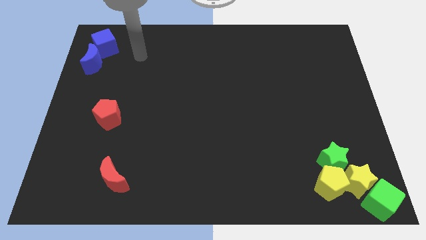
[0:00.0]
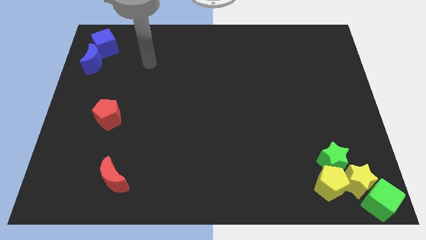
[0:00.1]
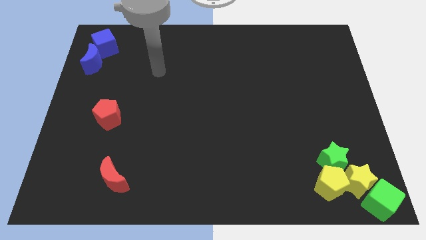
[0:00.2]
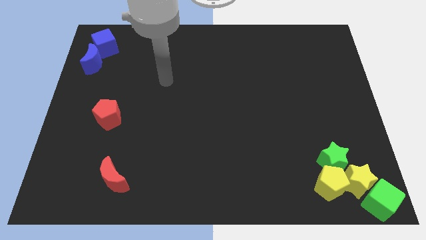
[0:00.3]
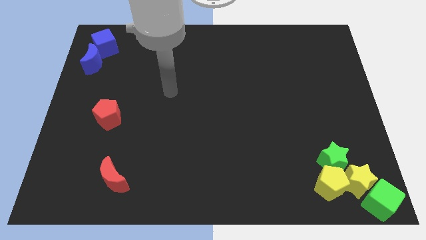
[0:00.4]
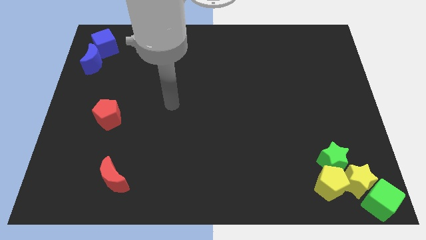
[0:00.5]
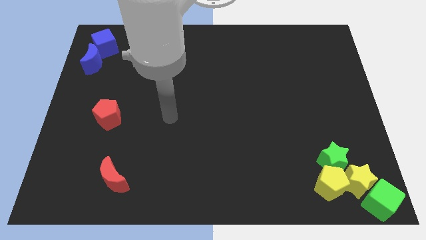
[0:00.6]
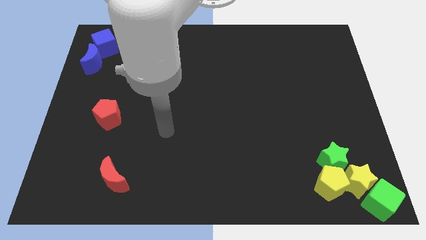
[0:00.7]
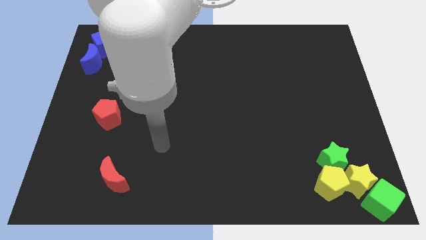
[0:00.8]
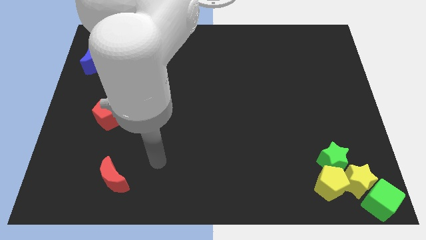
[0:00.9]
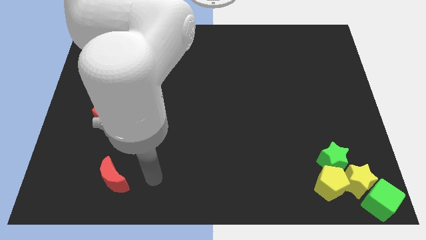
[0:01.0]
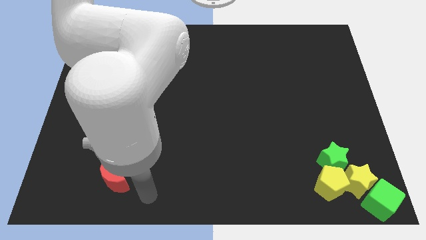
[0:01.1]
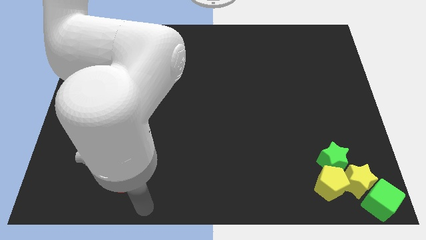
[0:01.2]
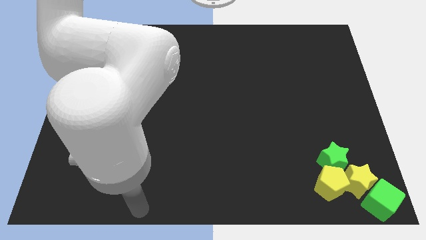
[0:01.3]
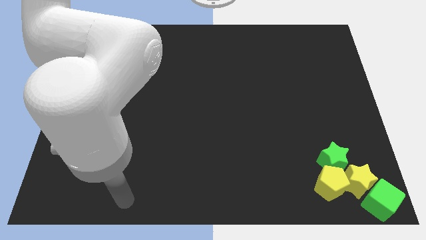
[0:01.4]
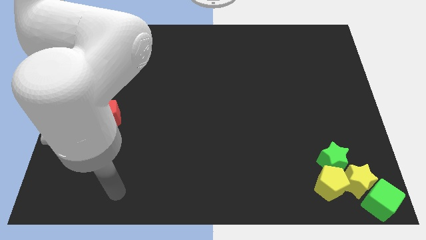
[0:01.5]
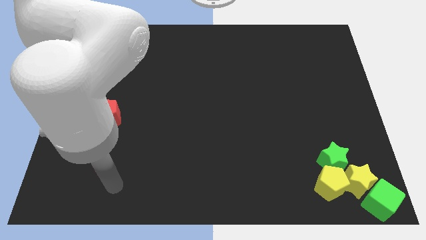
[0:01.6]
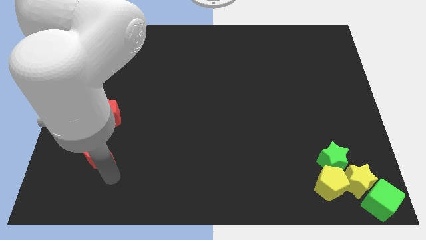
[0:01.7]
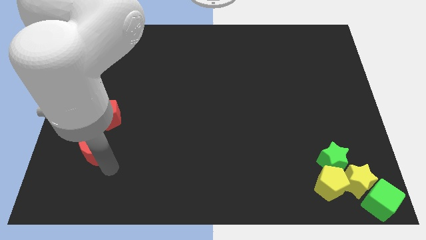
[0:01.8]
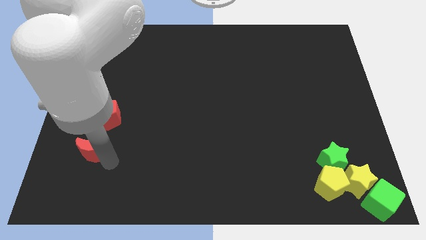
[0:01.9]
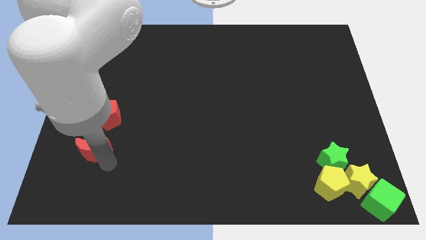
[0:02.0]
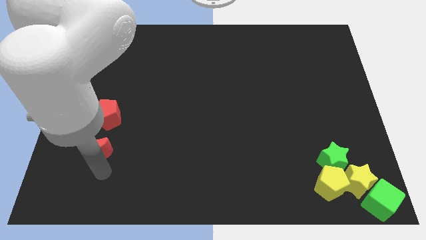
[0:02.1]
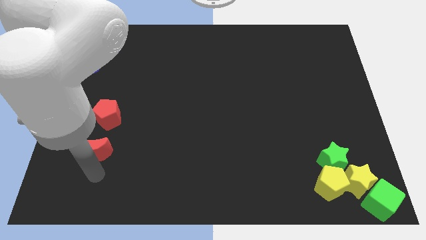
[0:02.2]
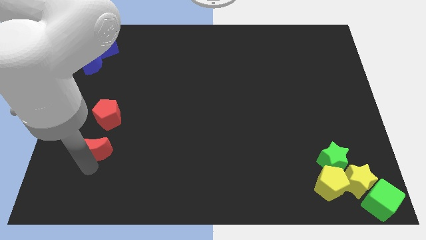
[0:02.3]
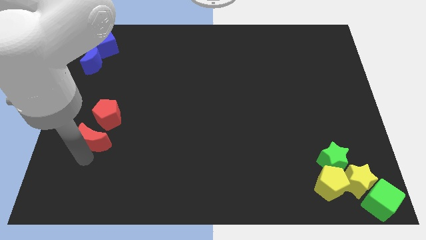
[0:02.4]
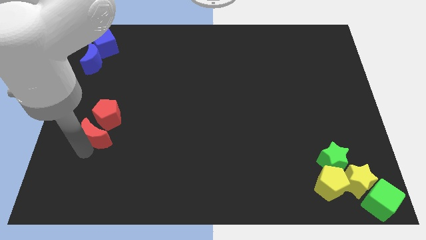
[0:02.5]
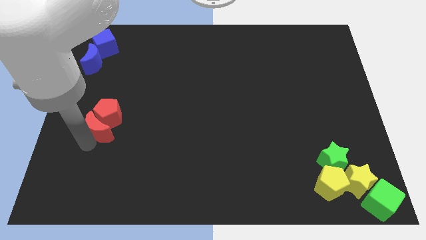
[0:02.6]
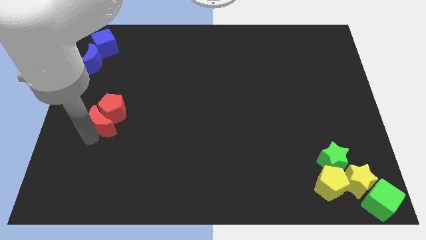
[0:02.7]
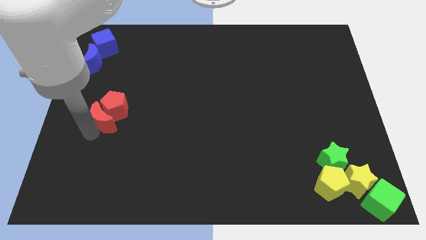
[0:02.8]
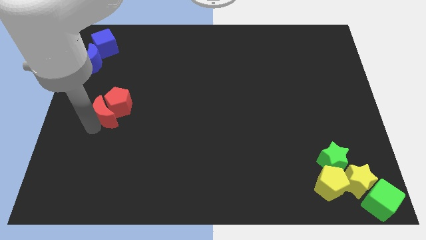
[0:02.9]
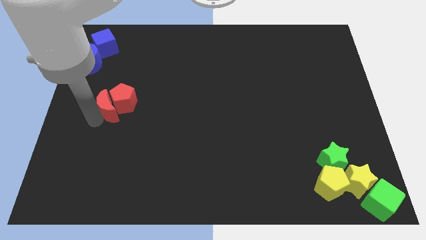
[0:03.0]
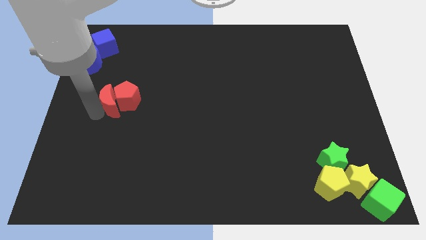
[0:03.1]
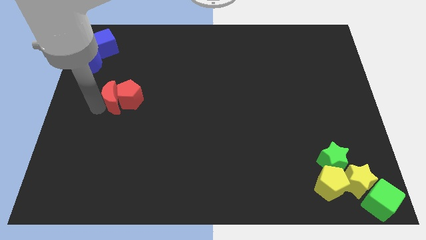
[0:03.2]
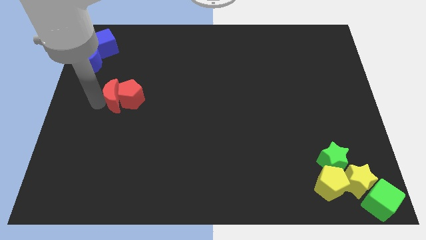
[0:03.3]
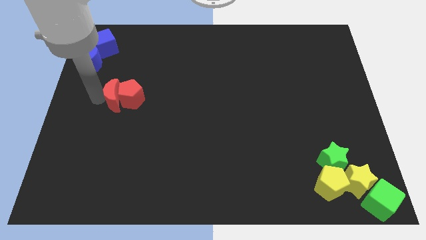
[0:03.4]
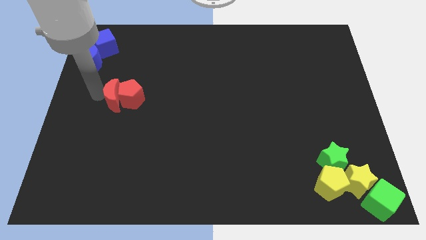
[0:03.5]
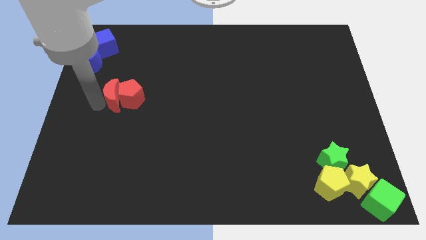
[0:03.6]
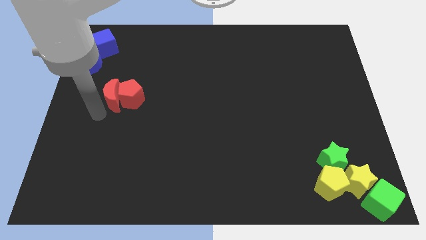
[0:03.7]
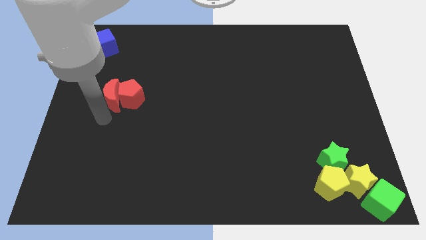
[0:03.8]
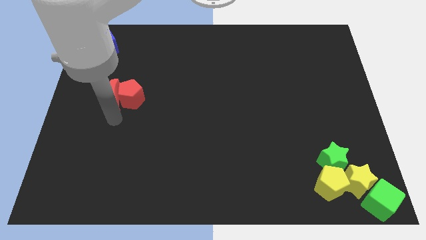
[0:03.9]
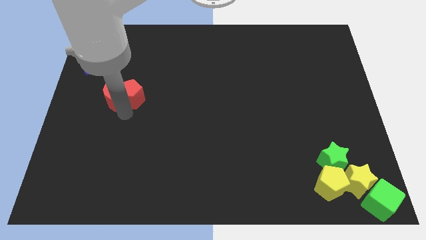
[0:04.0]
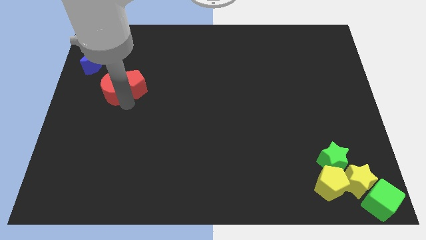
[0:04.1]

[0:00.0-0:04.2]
push the red crescent to the left of the red pentagon

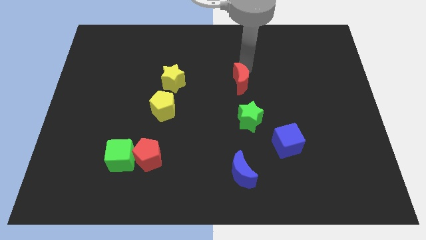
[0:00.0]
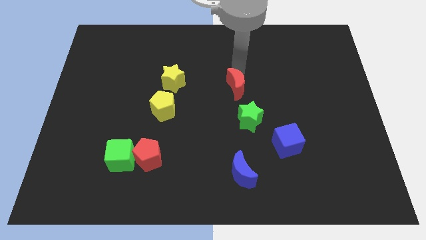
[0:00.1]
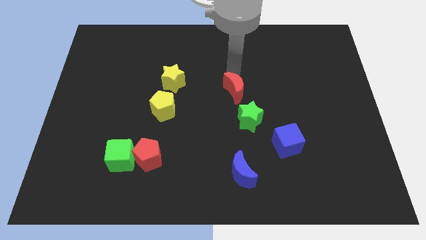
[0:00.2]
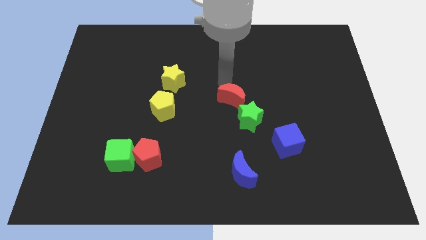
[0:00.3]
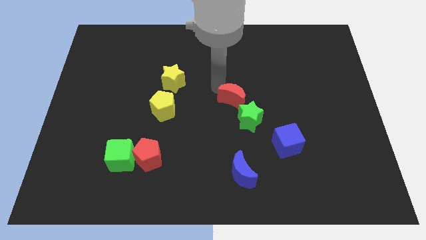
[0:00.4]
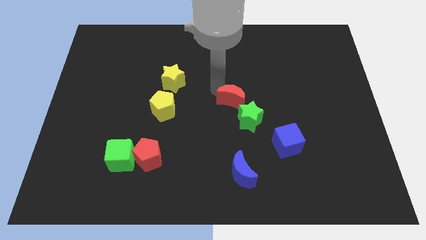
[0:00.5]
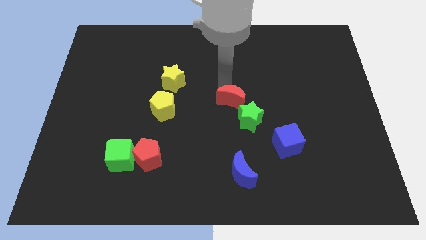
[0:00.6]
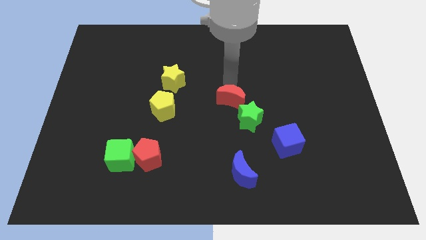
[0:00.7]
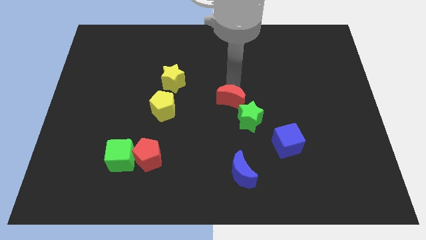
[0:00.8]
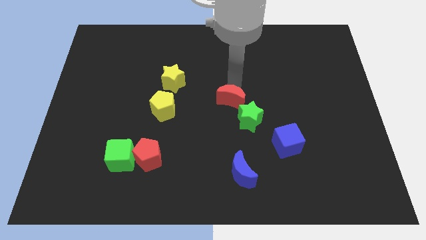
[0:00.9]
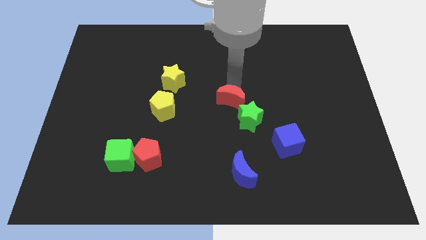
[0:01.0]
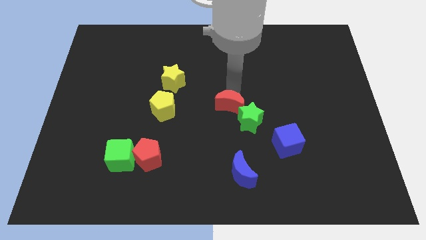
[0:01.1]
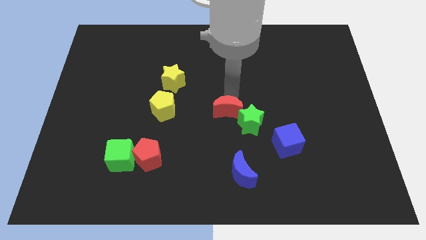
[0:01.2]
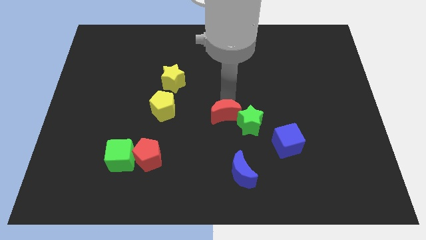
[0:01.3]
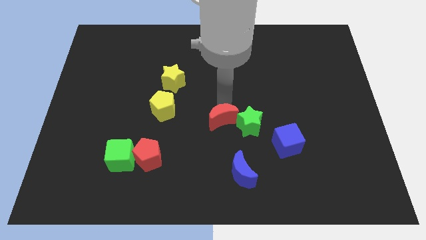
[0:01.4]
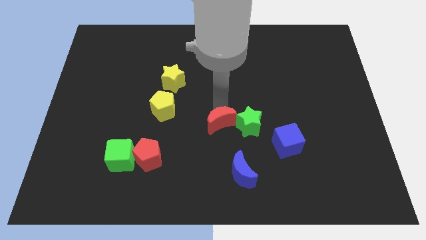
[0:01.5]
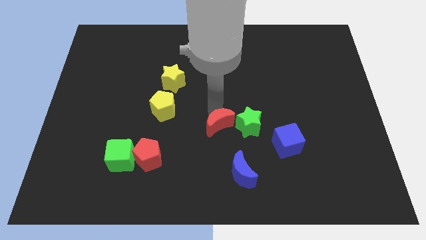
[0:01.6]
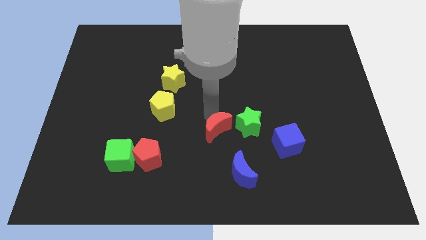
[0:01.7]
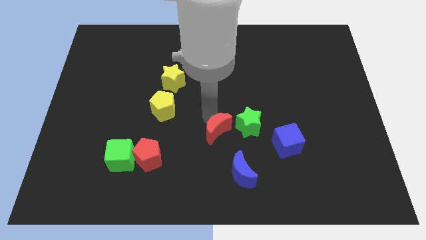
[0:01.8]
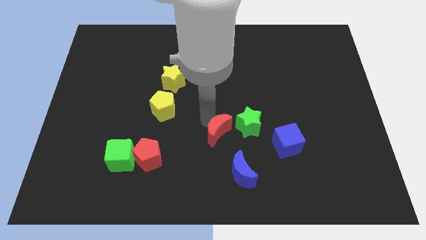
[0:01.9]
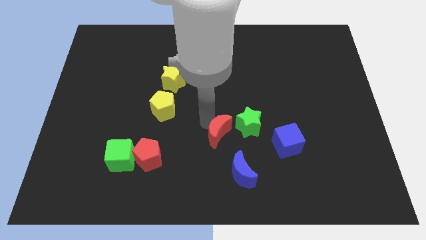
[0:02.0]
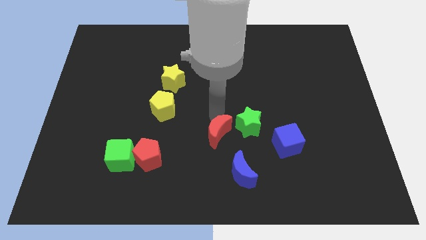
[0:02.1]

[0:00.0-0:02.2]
push the red crescent to the left of the green star

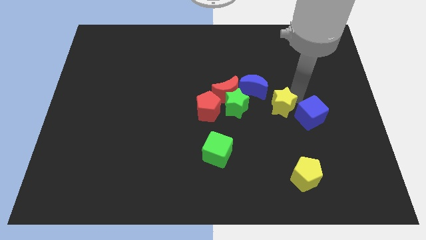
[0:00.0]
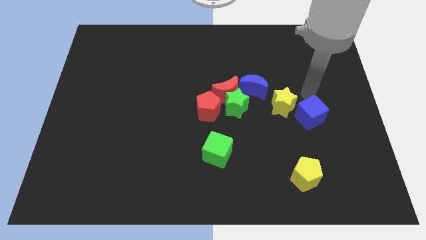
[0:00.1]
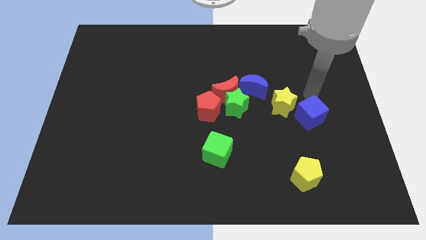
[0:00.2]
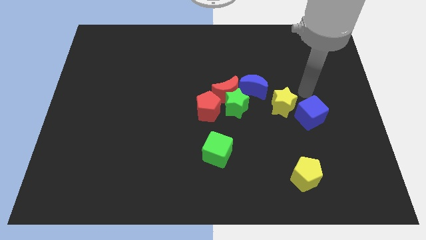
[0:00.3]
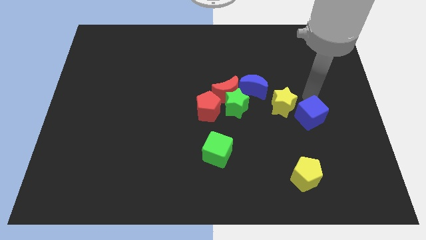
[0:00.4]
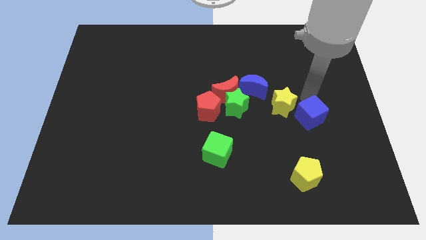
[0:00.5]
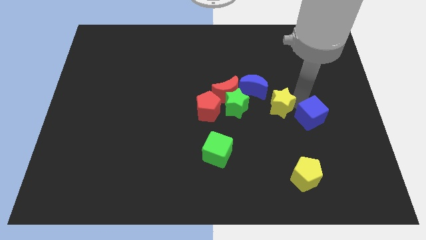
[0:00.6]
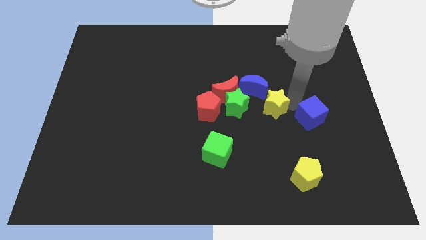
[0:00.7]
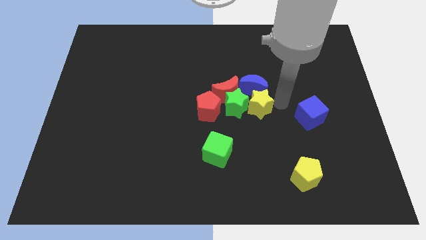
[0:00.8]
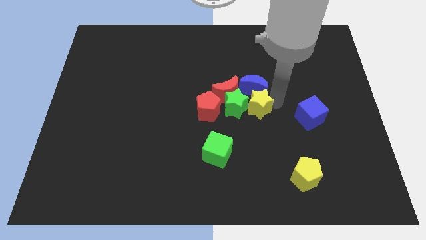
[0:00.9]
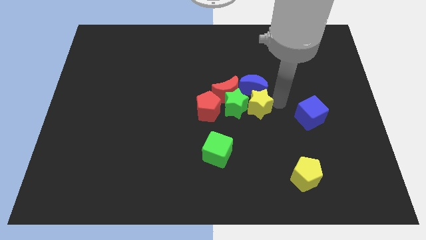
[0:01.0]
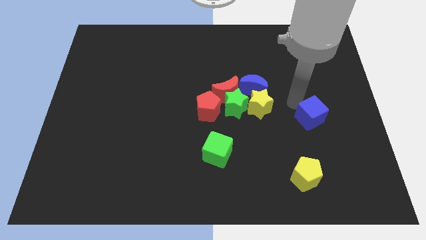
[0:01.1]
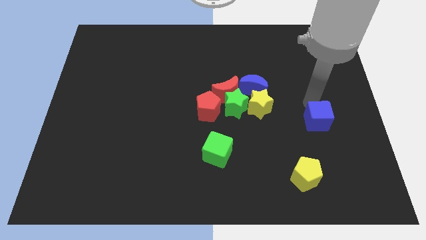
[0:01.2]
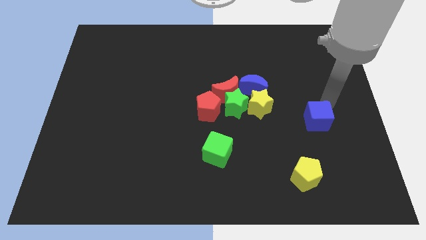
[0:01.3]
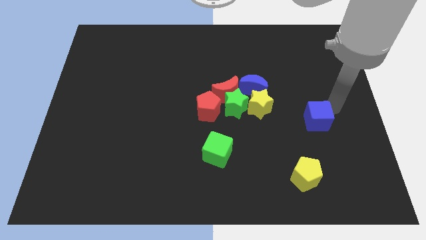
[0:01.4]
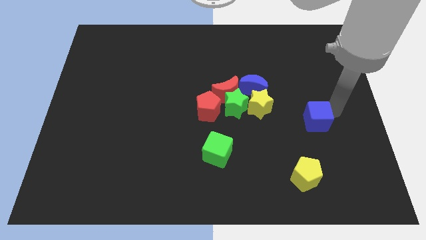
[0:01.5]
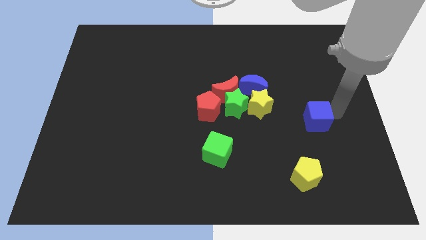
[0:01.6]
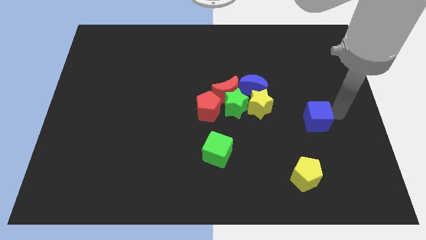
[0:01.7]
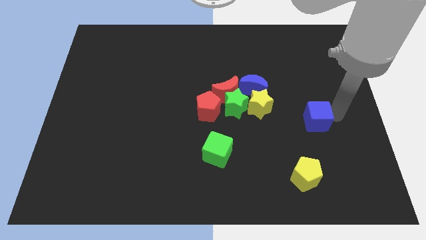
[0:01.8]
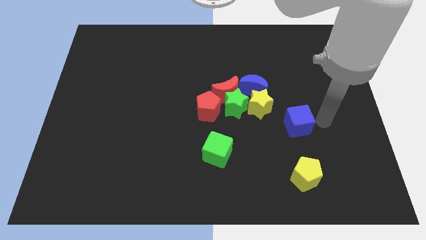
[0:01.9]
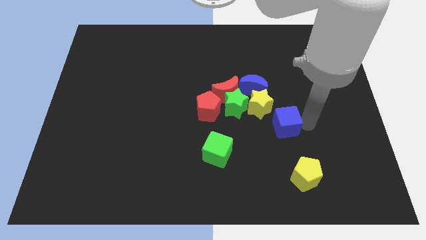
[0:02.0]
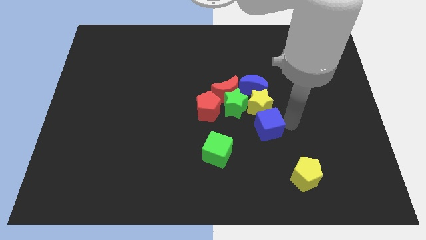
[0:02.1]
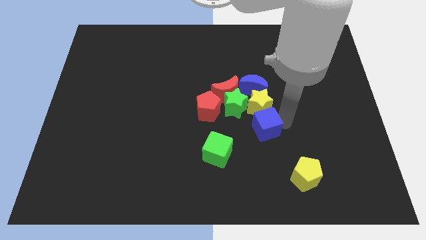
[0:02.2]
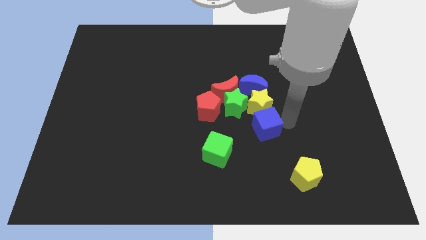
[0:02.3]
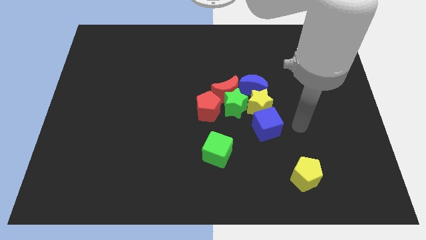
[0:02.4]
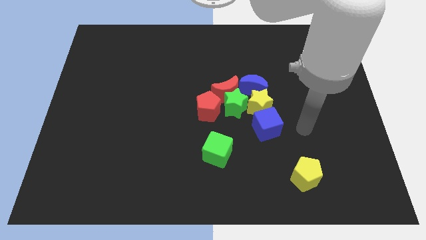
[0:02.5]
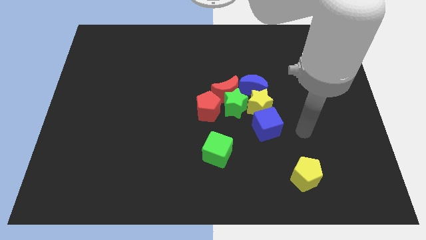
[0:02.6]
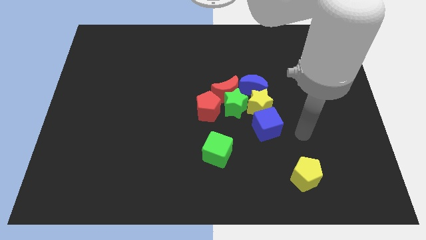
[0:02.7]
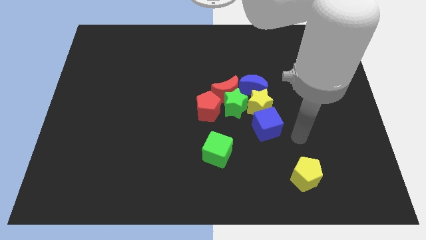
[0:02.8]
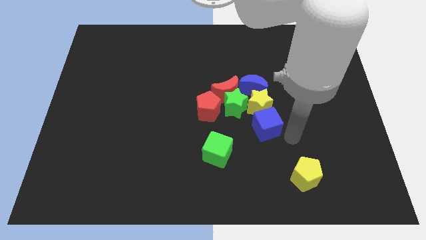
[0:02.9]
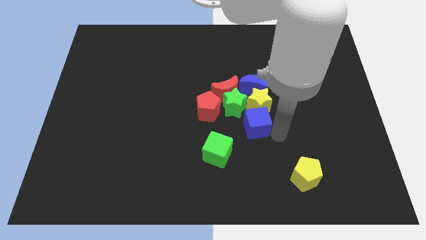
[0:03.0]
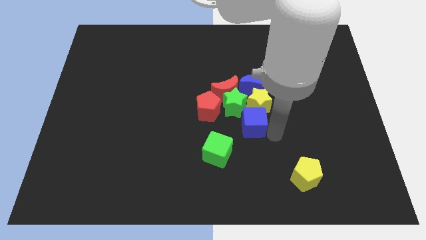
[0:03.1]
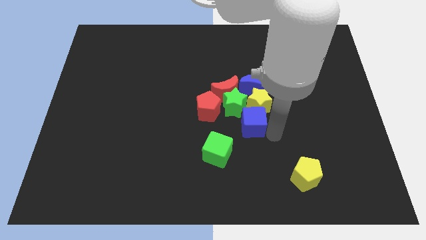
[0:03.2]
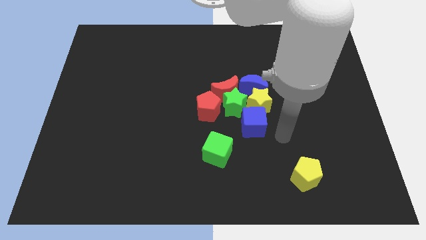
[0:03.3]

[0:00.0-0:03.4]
push the yellow star and blue cube into the green star
